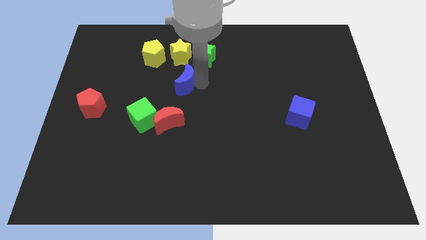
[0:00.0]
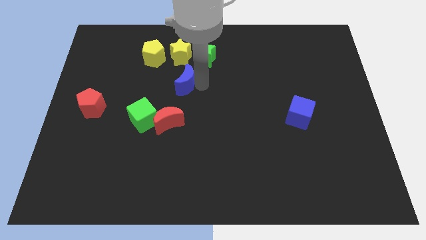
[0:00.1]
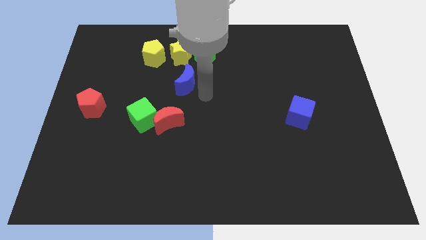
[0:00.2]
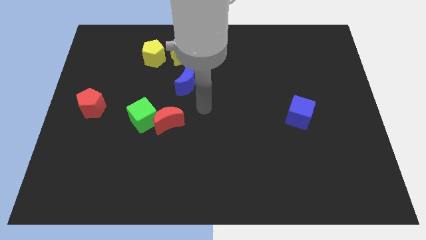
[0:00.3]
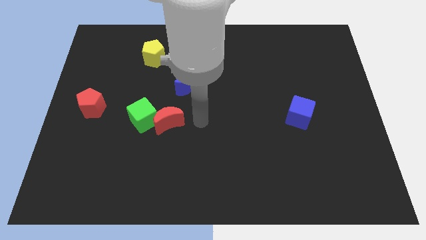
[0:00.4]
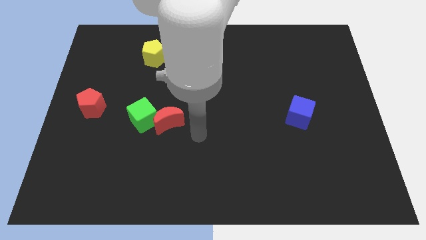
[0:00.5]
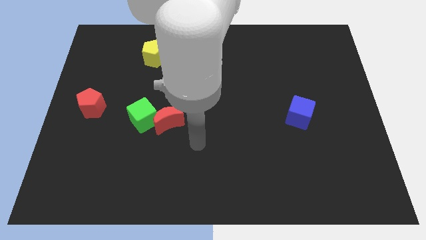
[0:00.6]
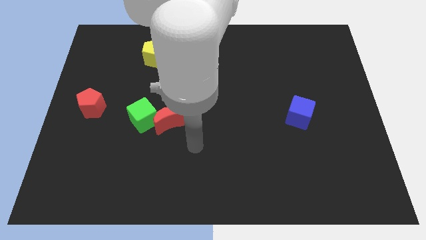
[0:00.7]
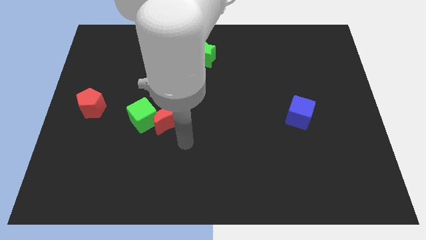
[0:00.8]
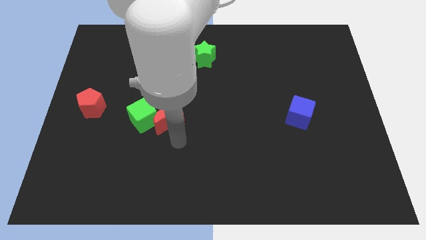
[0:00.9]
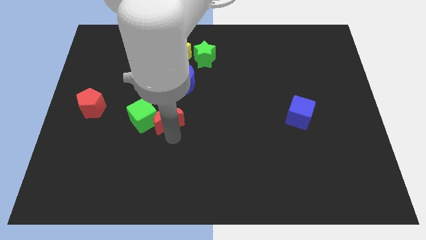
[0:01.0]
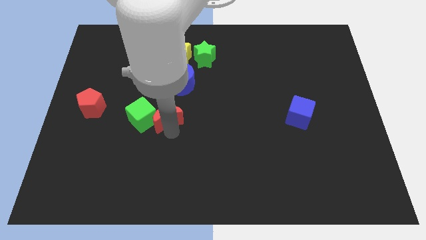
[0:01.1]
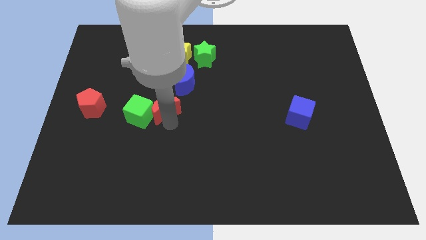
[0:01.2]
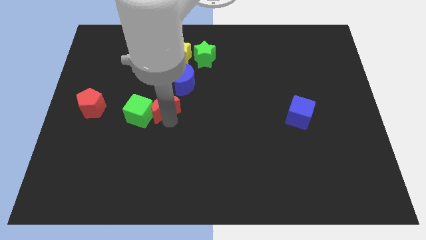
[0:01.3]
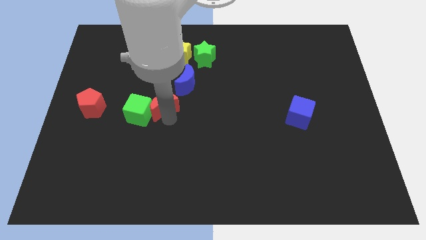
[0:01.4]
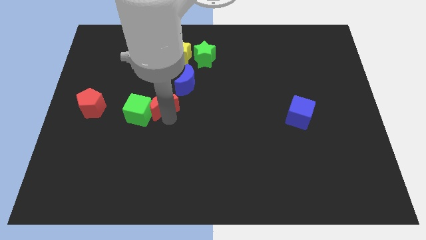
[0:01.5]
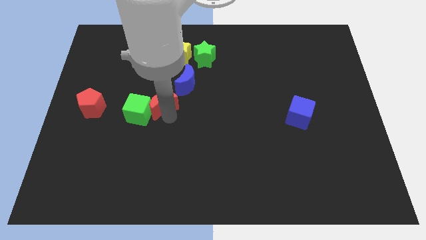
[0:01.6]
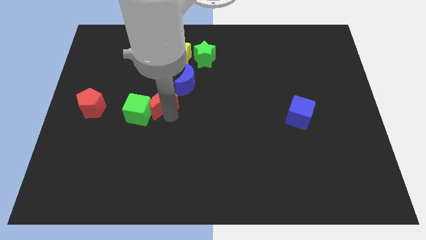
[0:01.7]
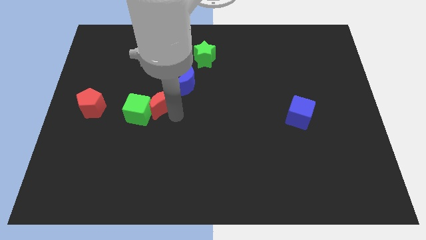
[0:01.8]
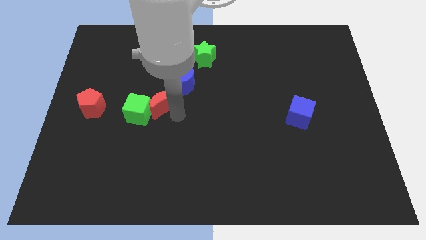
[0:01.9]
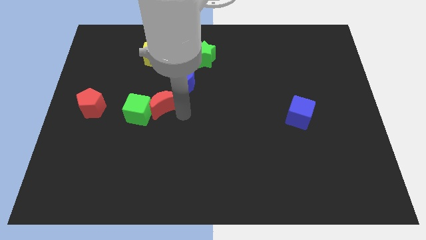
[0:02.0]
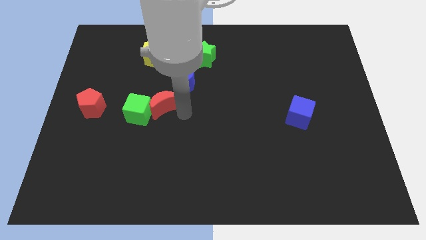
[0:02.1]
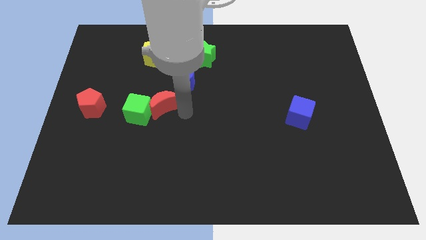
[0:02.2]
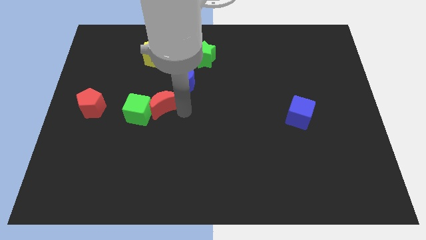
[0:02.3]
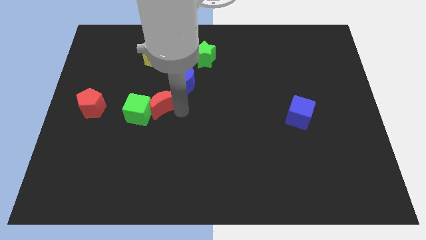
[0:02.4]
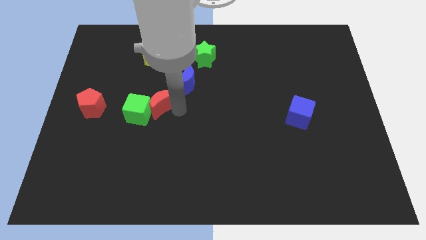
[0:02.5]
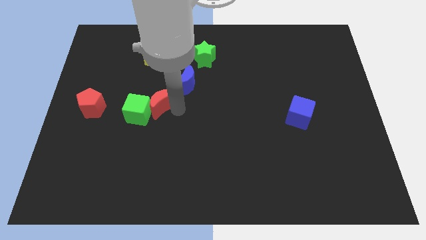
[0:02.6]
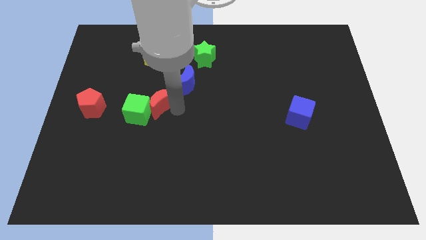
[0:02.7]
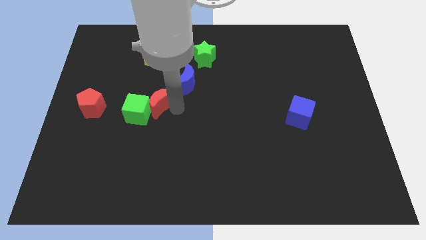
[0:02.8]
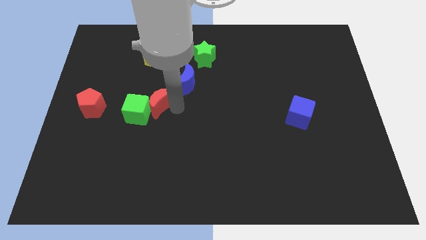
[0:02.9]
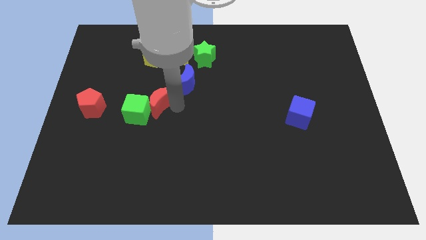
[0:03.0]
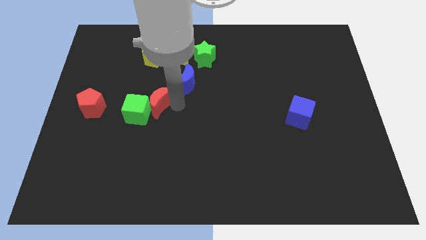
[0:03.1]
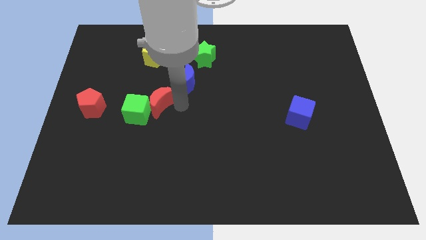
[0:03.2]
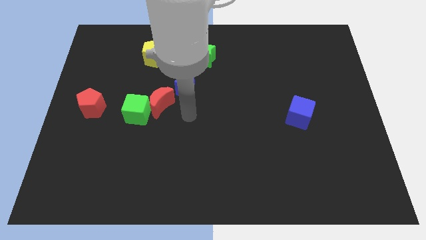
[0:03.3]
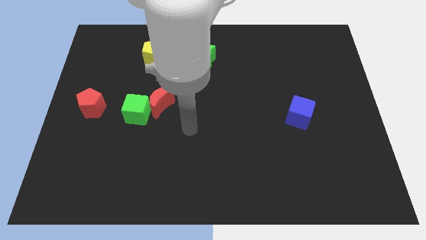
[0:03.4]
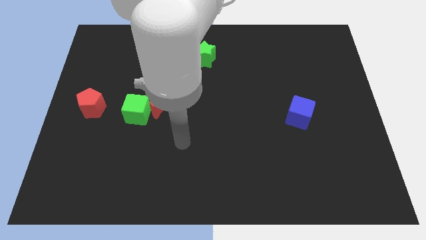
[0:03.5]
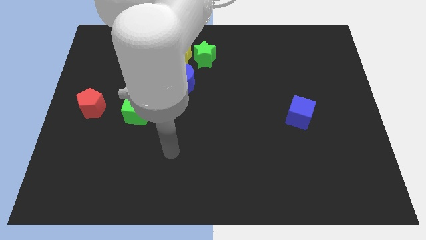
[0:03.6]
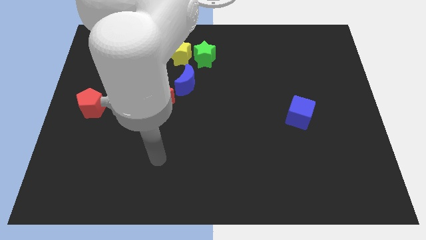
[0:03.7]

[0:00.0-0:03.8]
push the red crecent upwards slightly

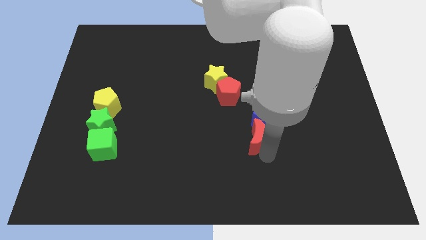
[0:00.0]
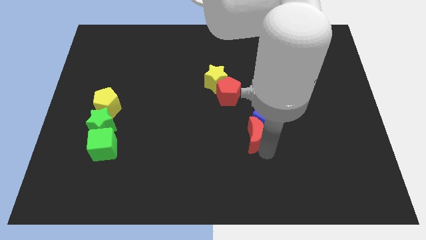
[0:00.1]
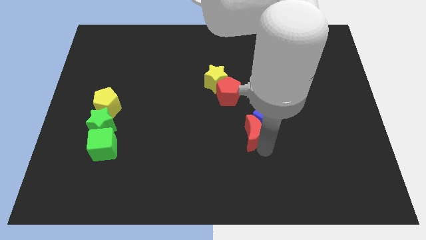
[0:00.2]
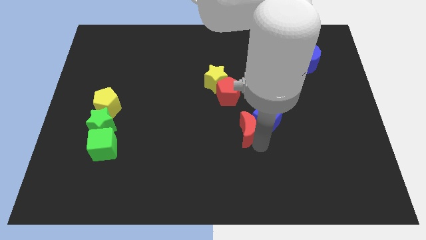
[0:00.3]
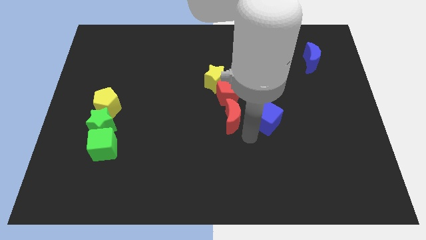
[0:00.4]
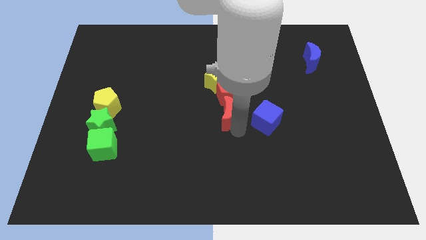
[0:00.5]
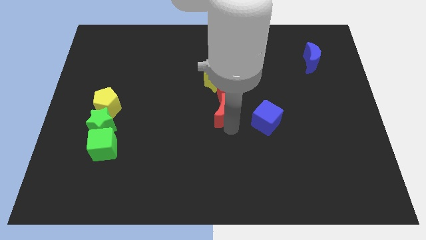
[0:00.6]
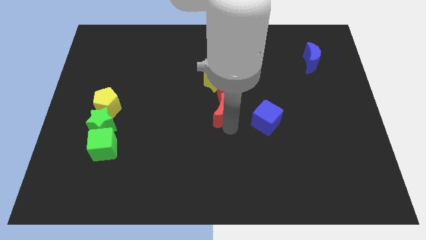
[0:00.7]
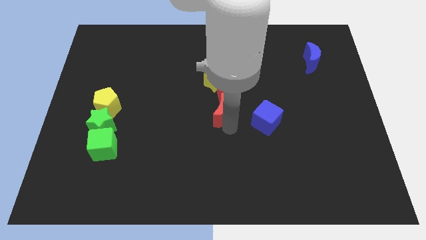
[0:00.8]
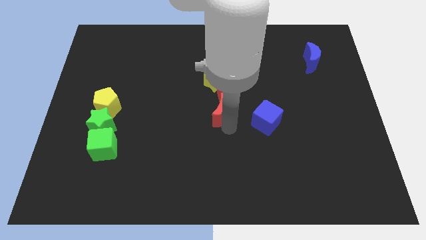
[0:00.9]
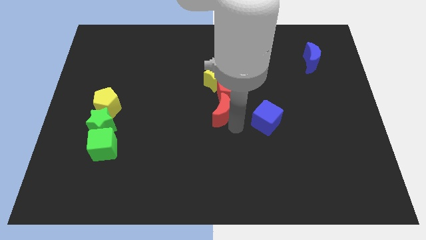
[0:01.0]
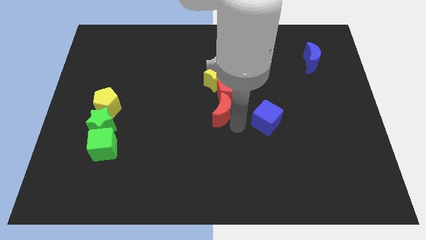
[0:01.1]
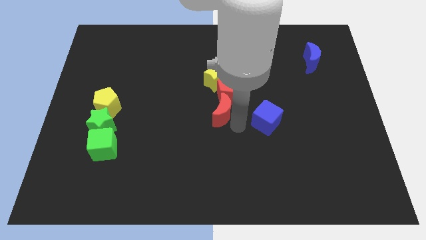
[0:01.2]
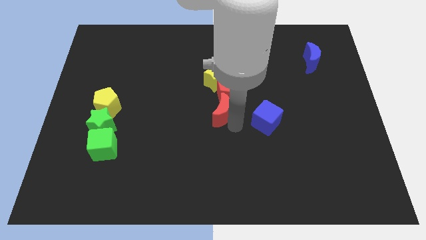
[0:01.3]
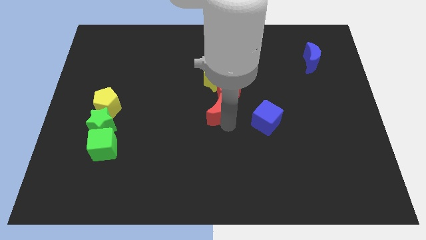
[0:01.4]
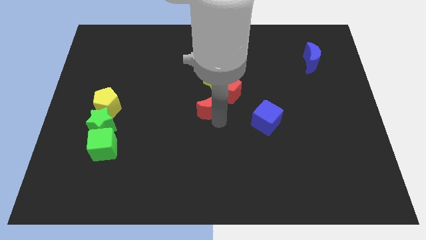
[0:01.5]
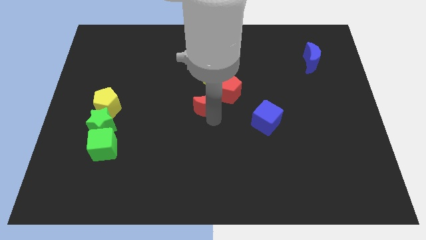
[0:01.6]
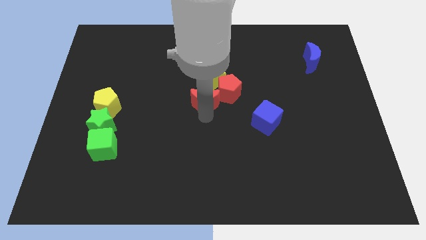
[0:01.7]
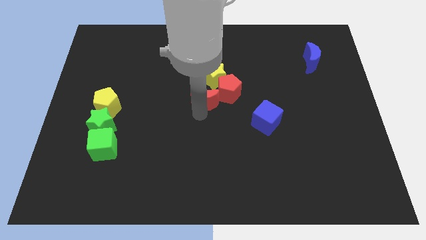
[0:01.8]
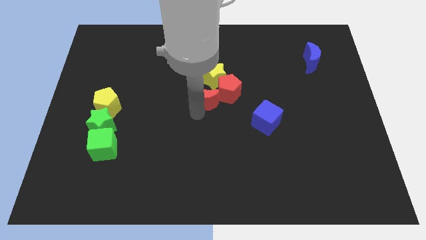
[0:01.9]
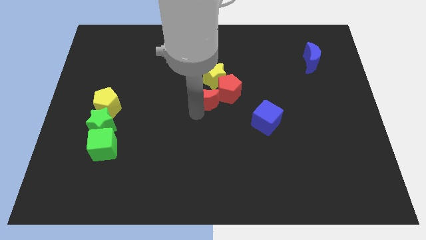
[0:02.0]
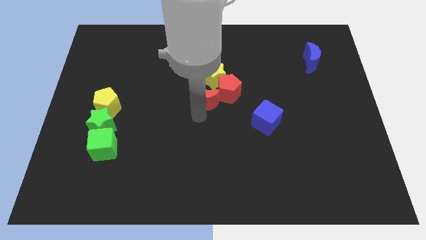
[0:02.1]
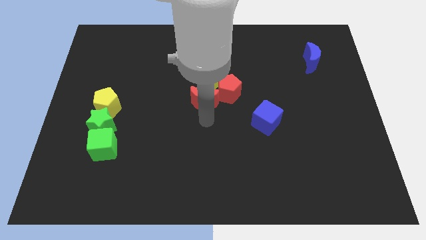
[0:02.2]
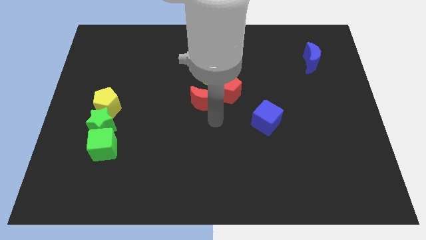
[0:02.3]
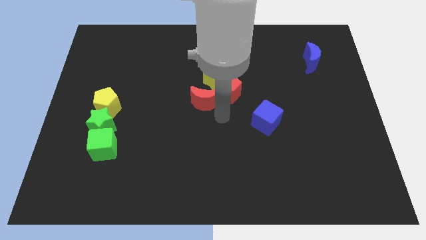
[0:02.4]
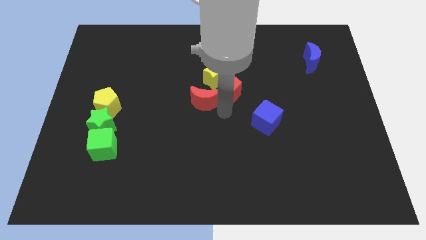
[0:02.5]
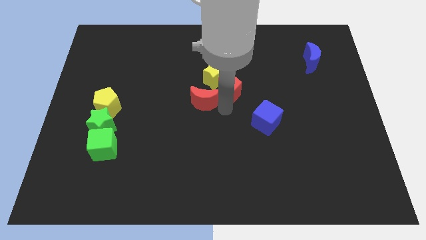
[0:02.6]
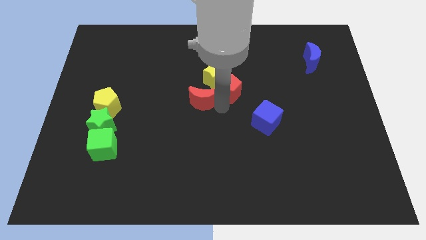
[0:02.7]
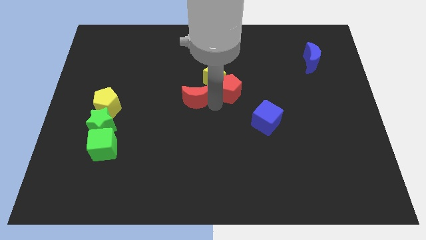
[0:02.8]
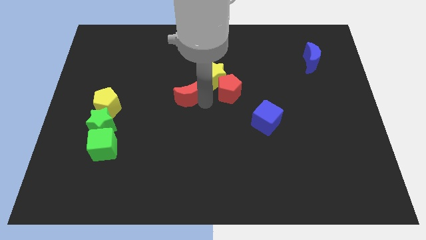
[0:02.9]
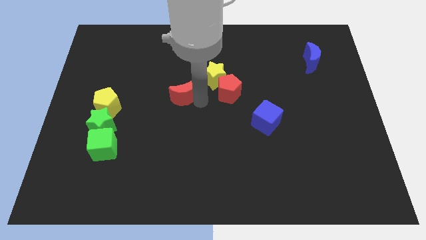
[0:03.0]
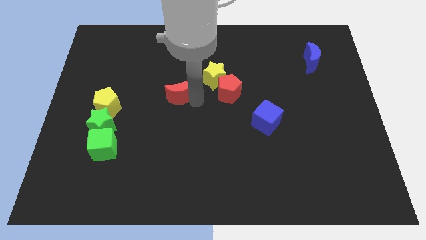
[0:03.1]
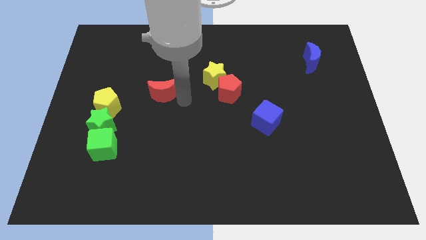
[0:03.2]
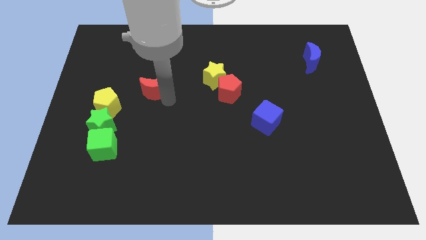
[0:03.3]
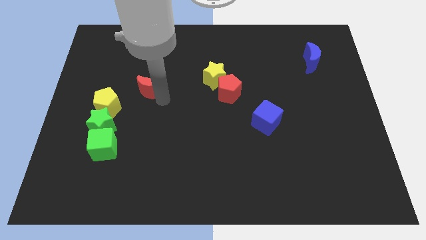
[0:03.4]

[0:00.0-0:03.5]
push the red moon slightly upwards

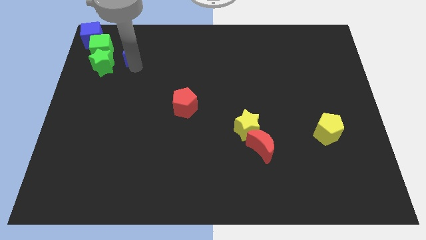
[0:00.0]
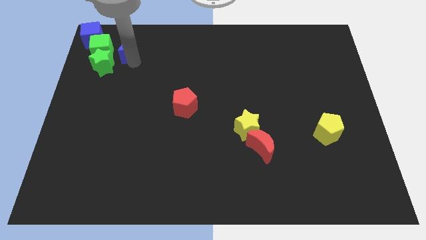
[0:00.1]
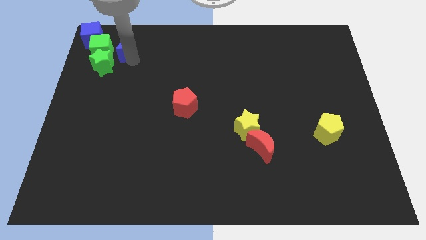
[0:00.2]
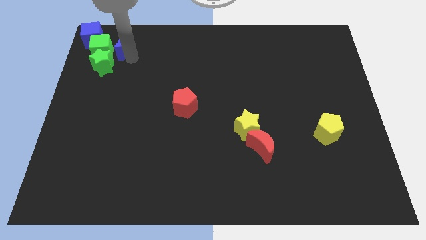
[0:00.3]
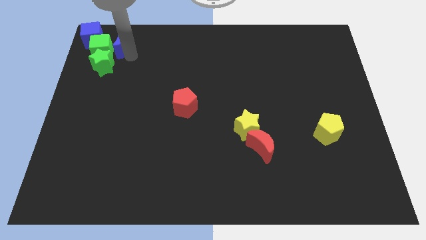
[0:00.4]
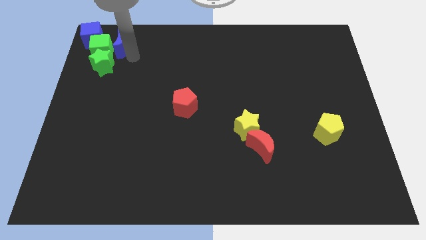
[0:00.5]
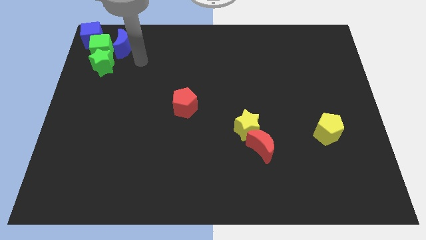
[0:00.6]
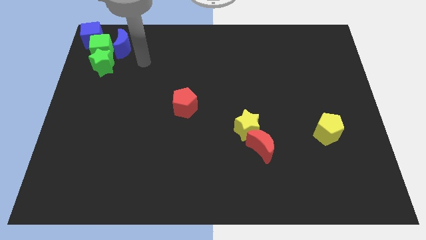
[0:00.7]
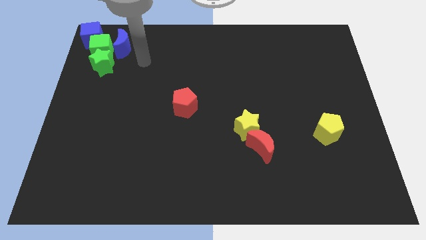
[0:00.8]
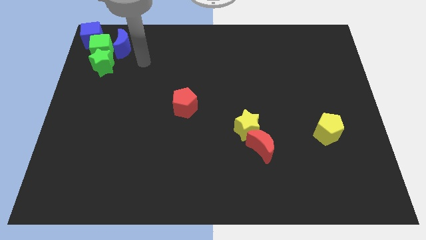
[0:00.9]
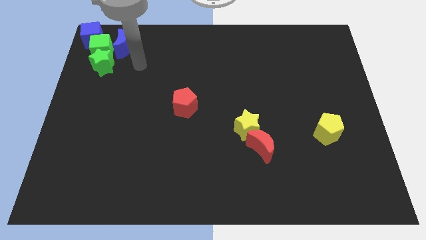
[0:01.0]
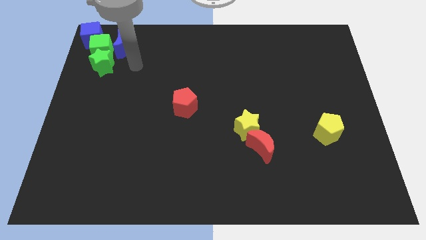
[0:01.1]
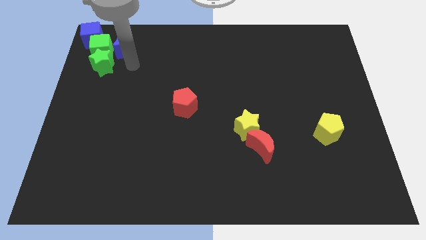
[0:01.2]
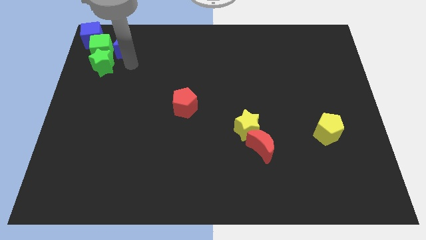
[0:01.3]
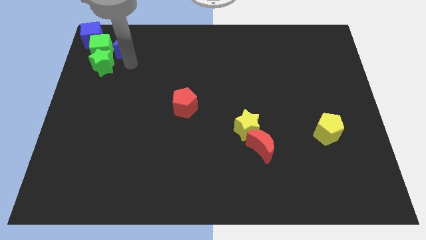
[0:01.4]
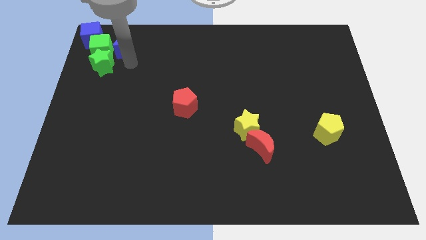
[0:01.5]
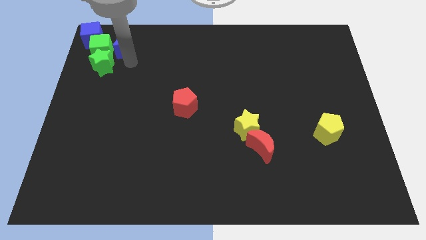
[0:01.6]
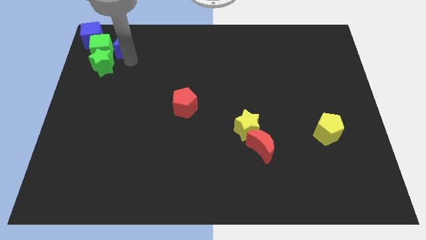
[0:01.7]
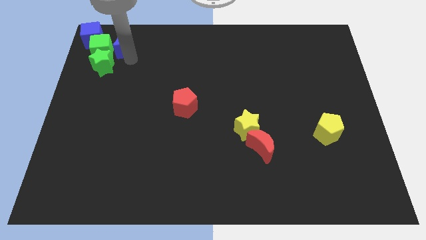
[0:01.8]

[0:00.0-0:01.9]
move the blue crescent to the right of the green cube
